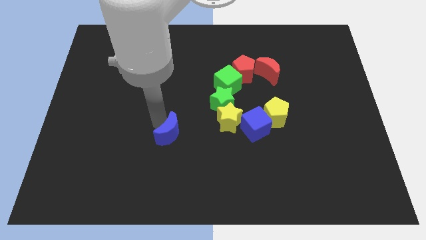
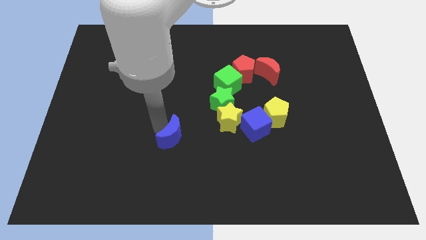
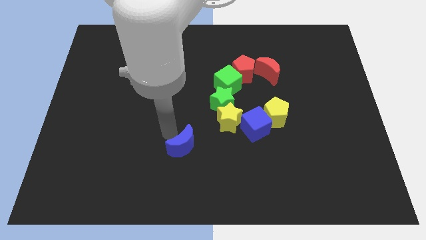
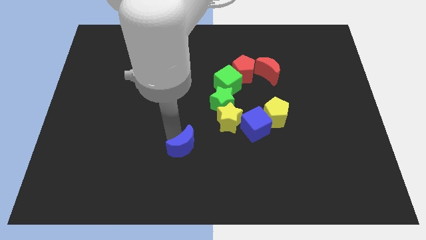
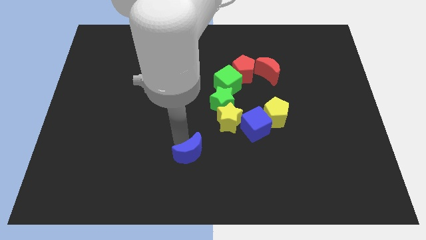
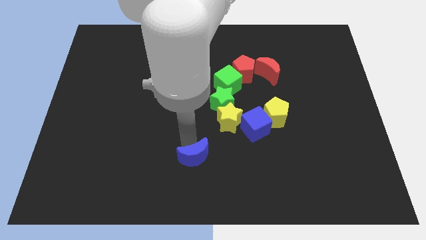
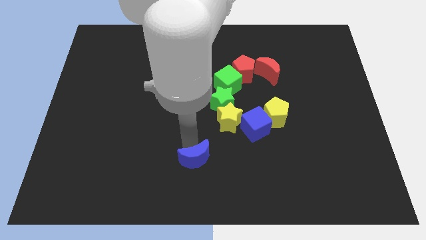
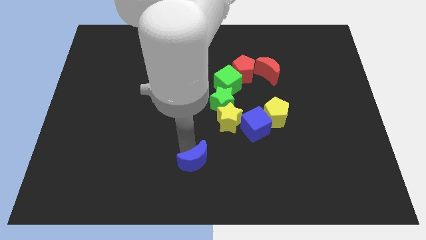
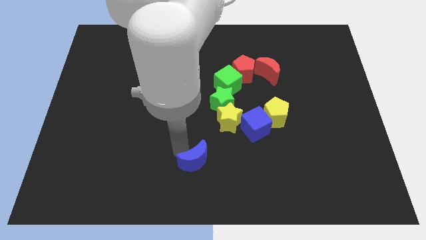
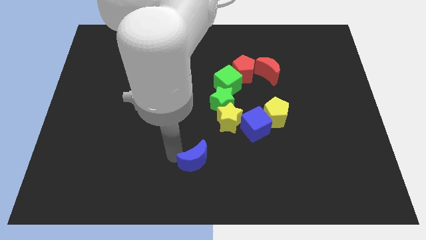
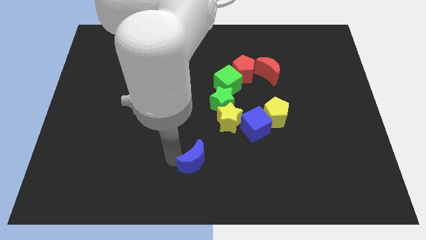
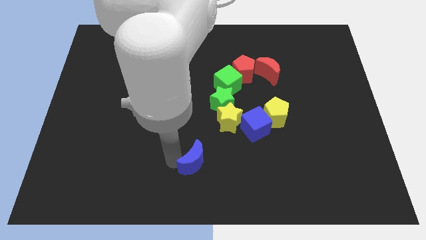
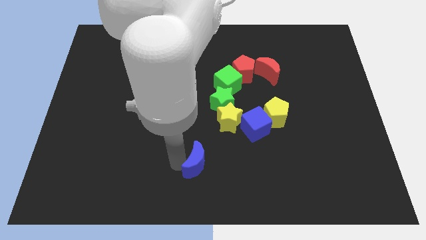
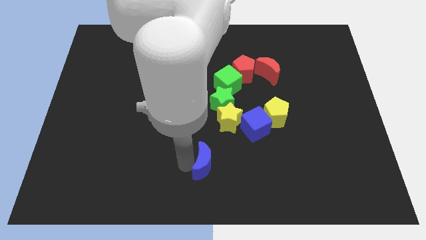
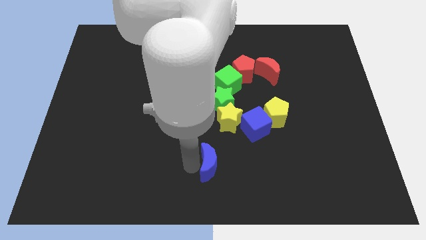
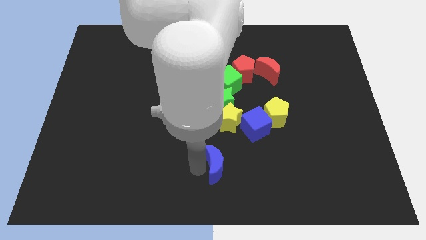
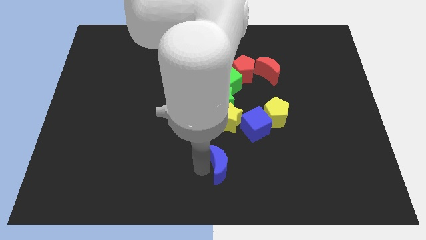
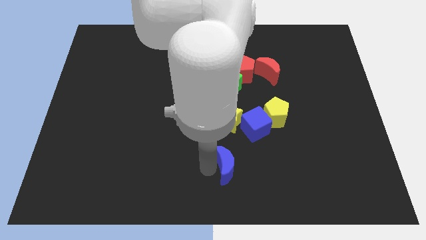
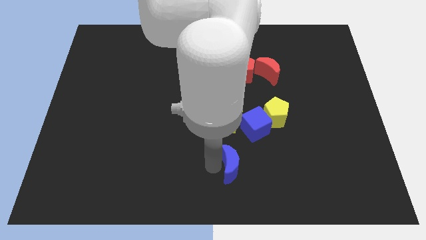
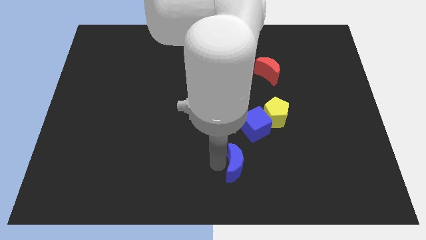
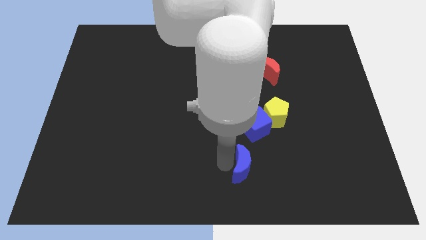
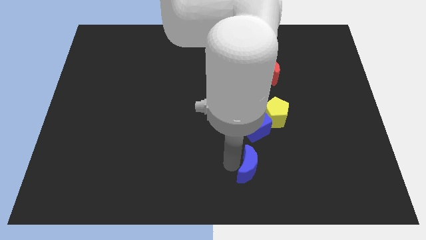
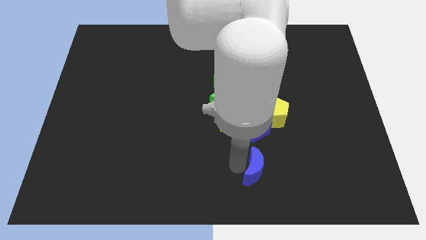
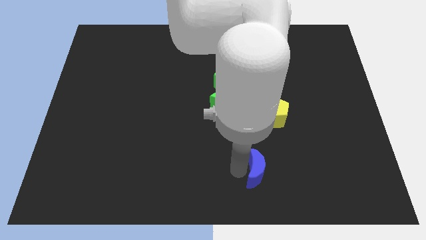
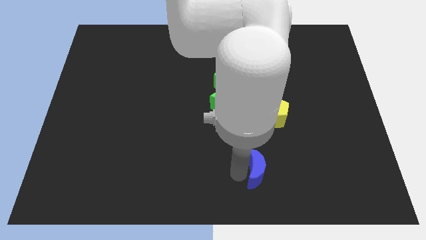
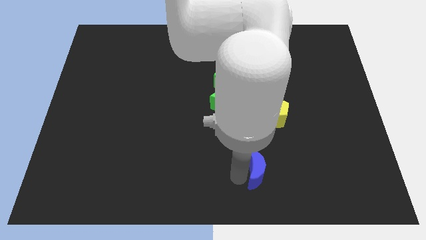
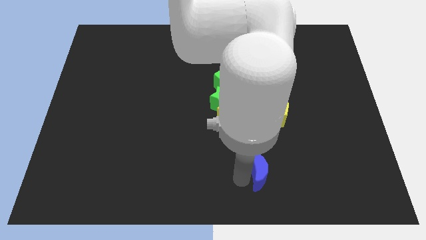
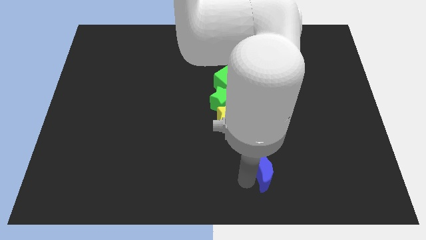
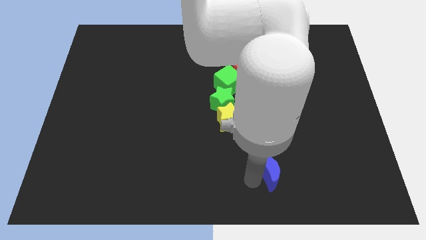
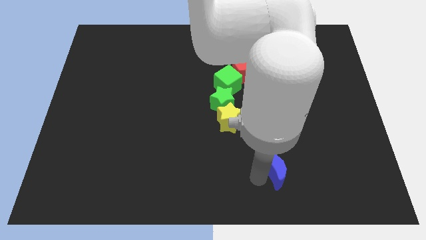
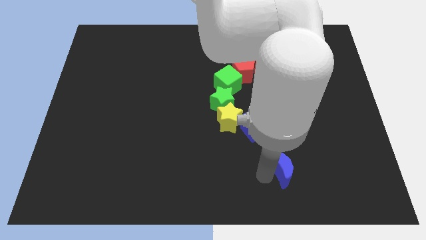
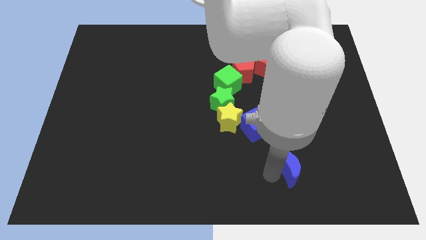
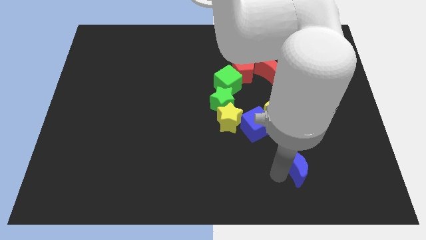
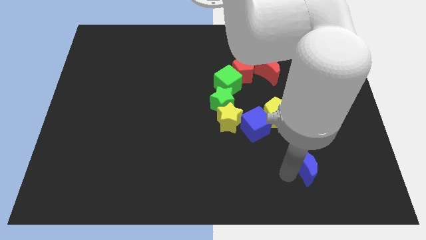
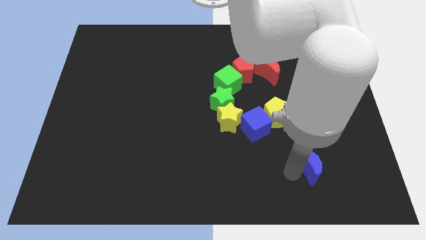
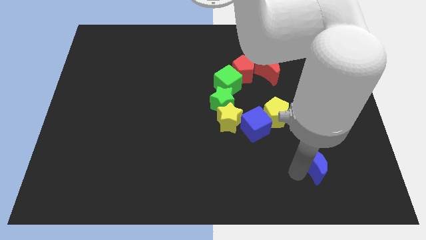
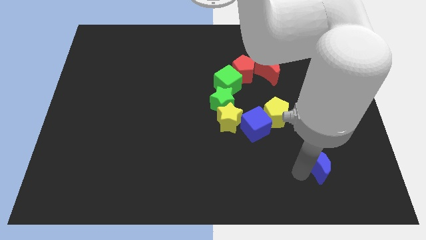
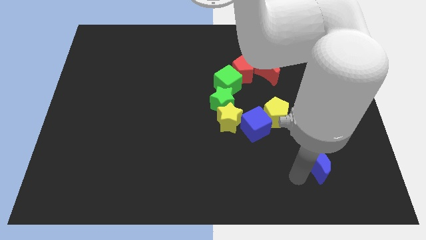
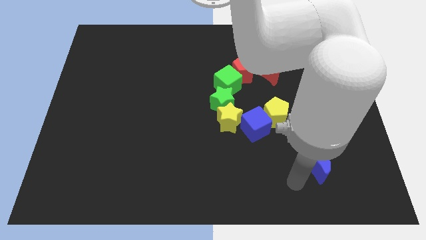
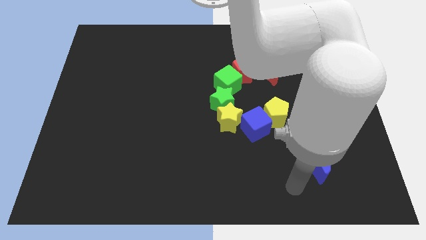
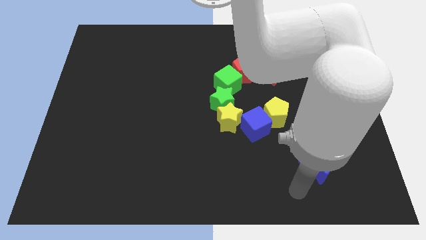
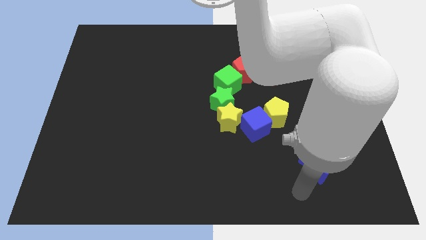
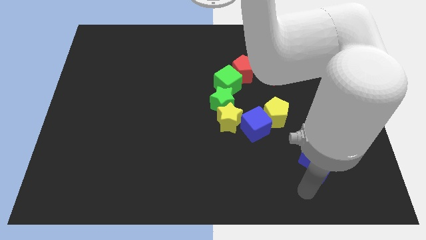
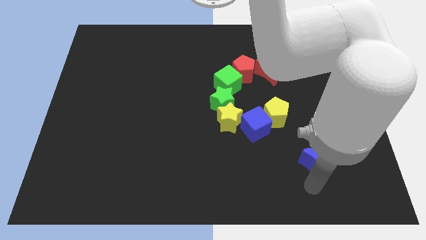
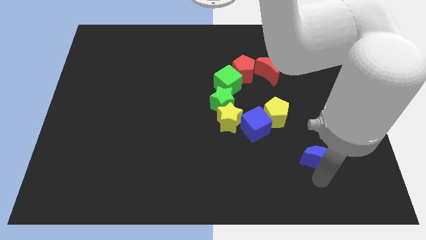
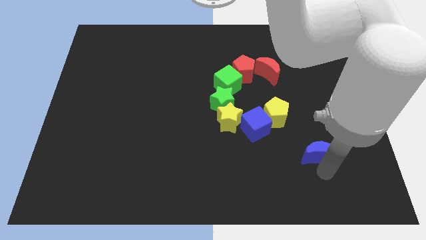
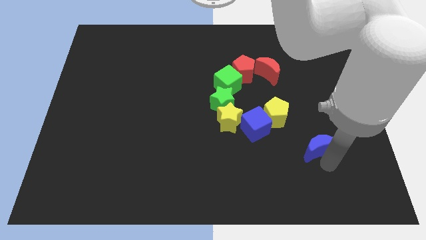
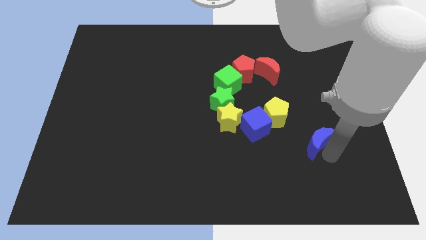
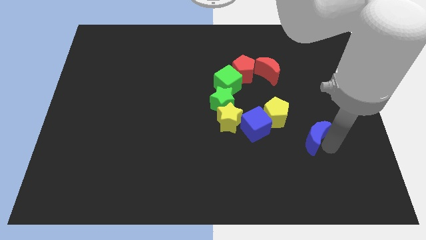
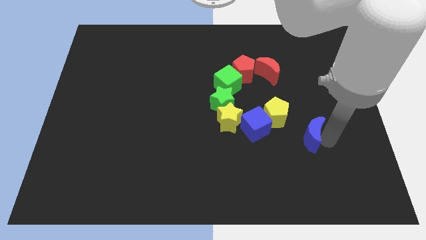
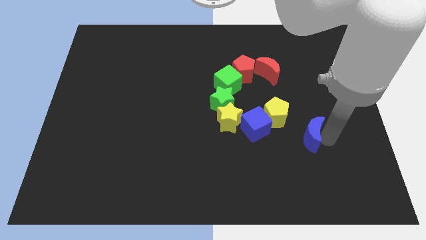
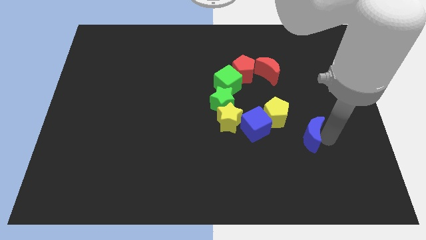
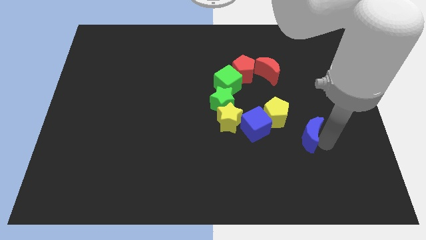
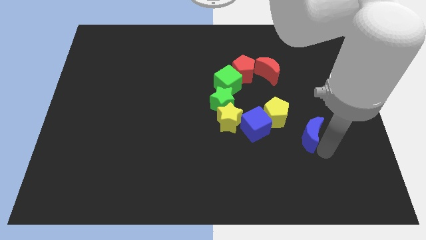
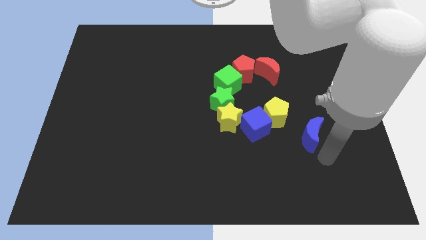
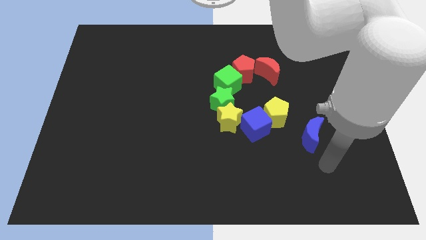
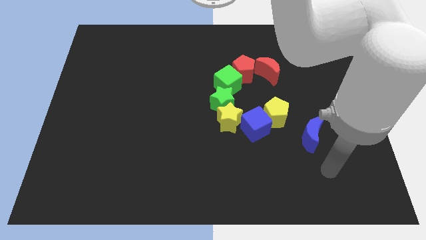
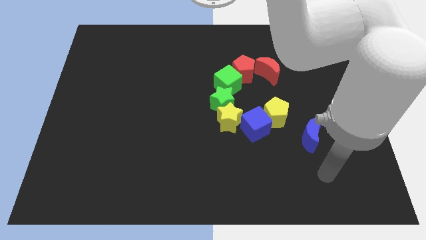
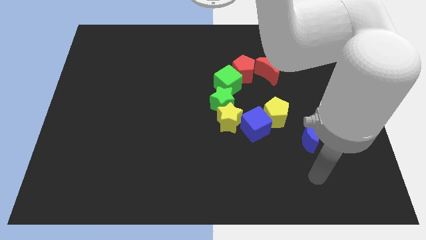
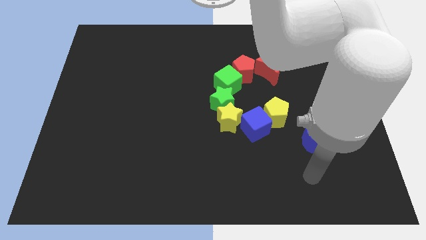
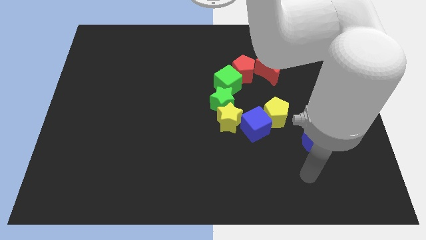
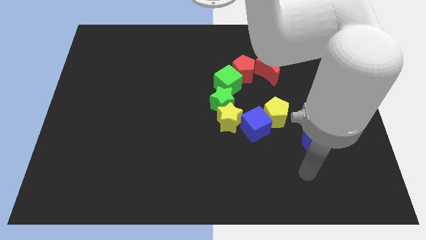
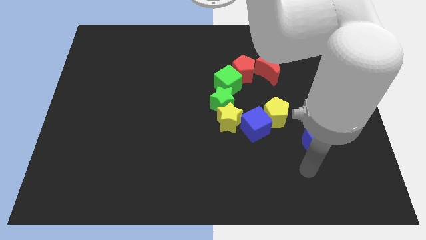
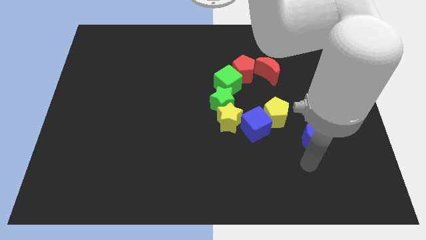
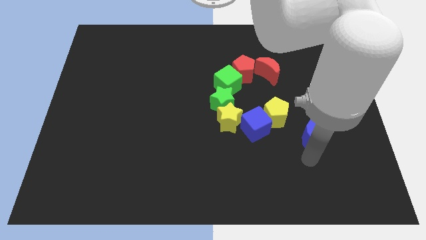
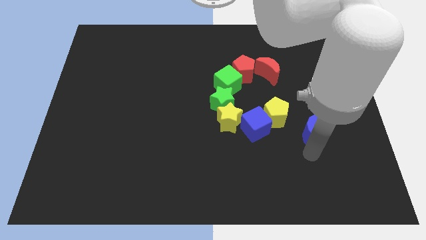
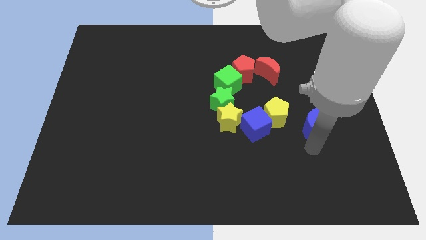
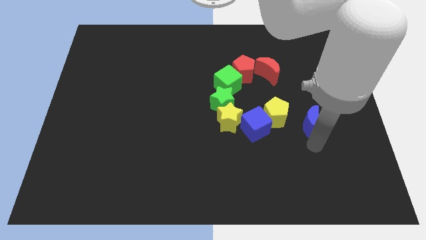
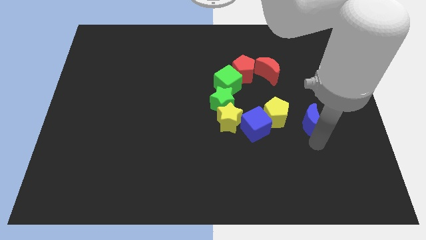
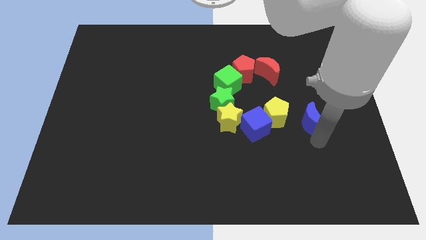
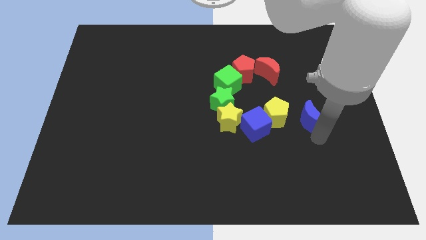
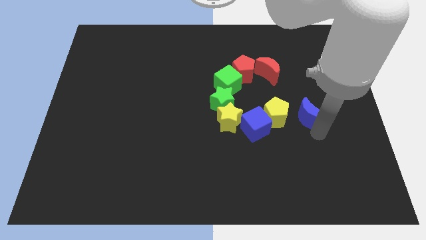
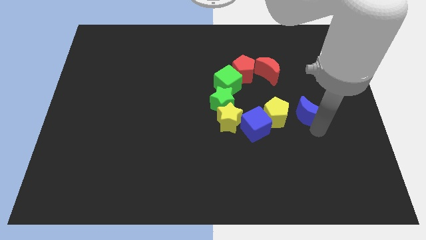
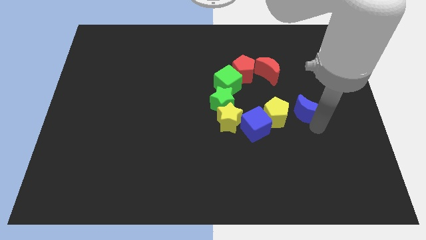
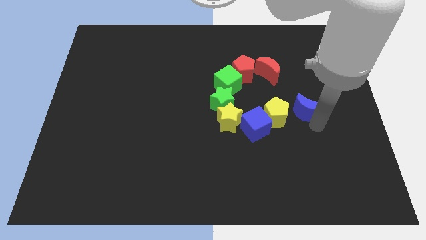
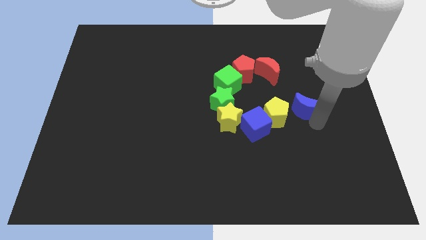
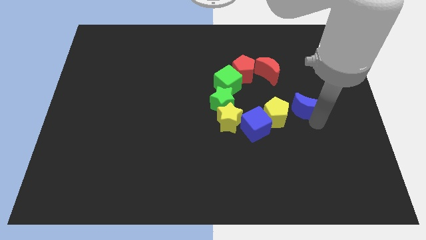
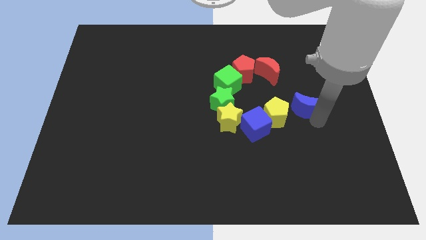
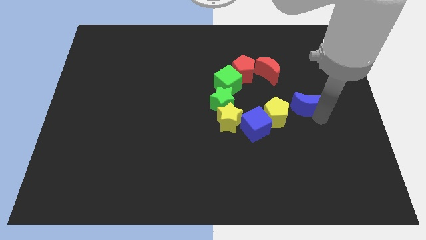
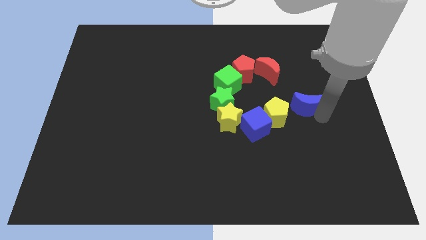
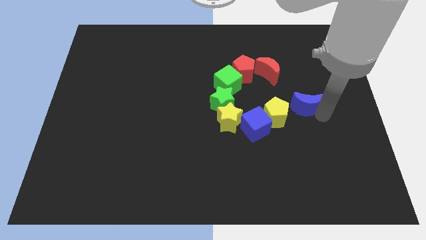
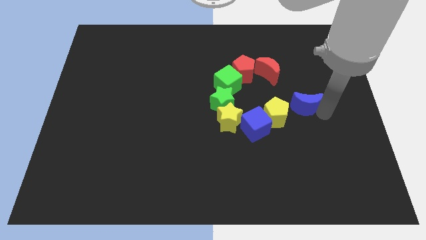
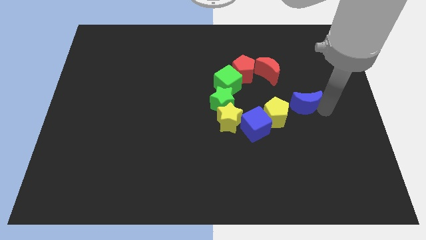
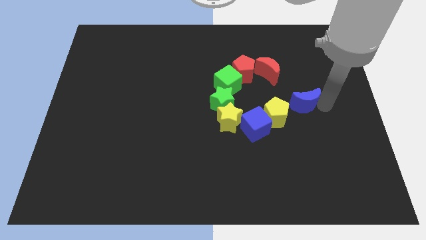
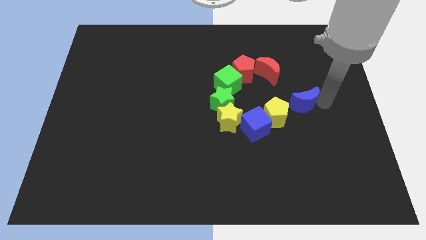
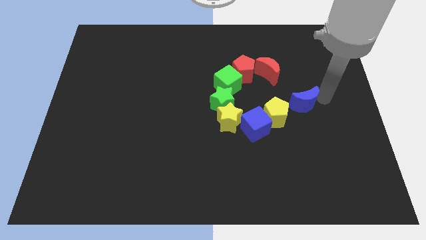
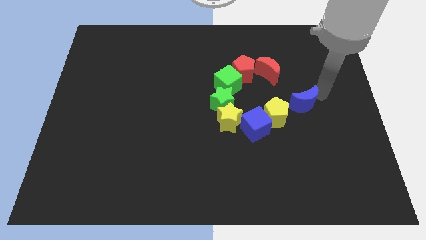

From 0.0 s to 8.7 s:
move blue crescent to the top right side of the yellow pentagon

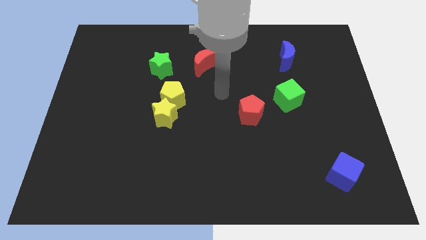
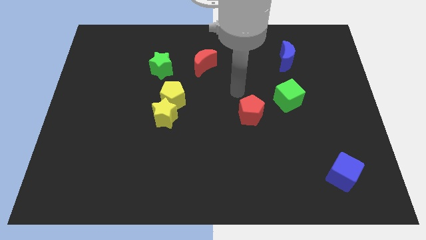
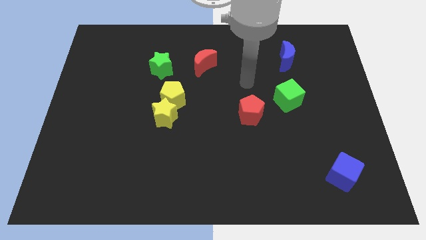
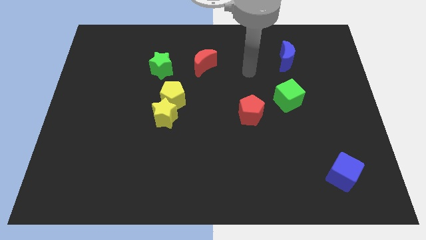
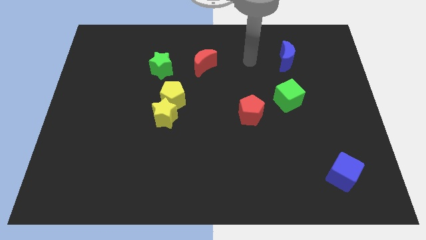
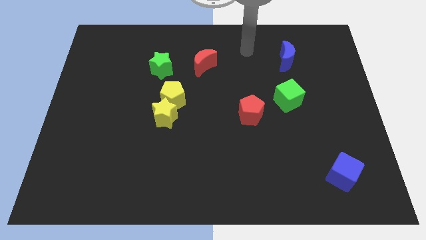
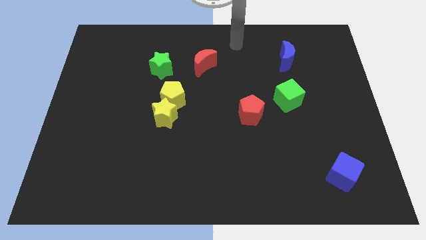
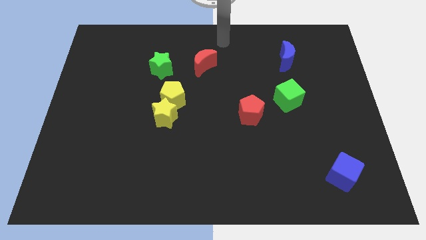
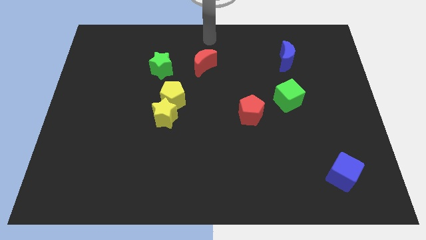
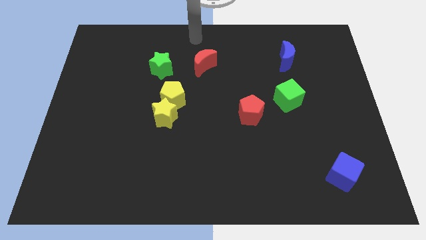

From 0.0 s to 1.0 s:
place arm on the top of red crescent
